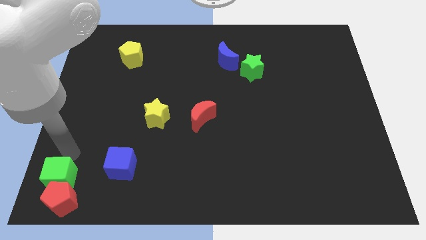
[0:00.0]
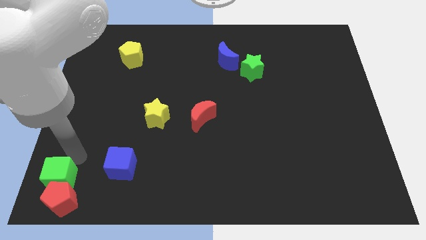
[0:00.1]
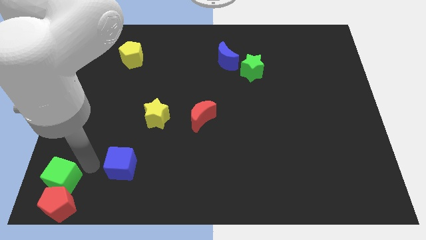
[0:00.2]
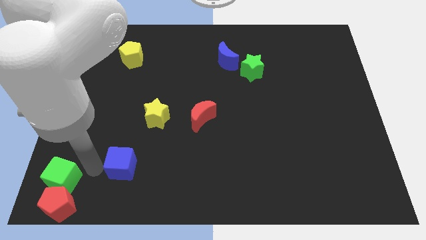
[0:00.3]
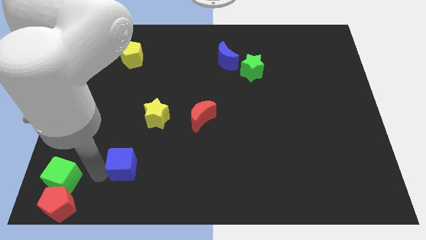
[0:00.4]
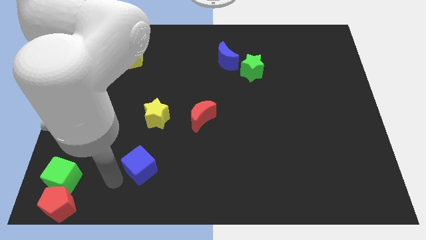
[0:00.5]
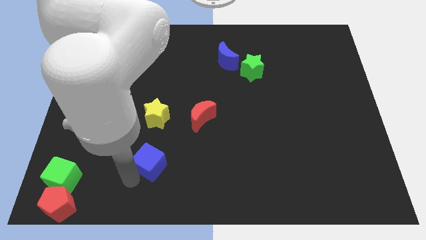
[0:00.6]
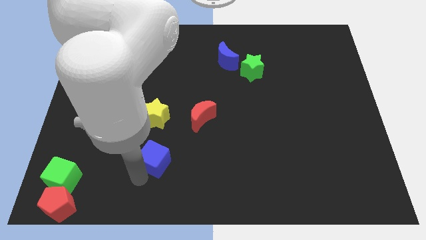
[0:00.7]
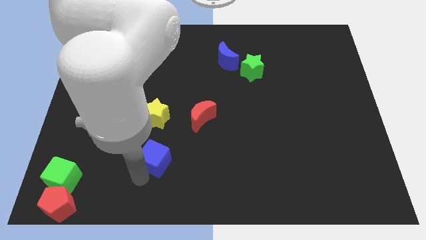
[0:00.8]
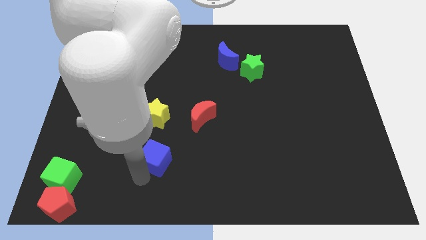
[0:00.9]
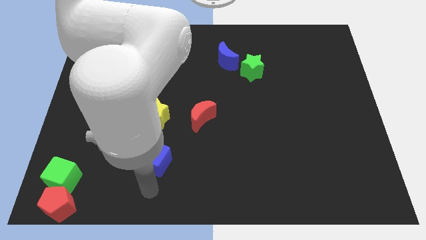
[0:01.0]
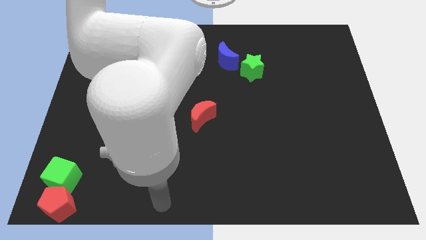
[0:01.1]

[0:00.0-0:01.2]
place blue cube down to the yellow star

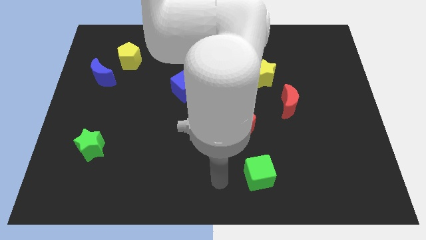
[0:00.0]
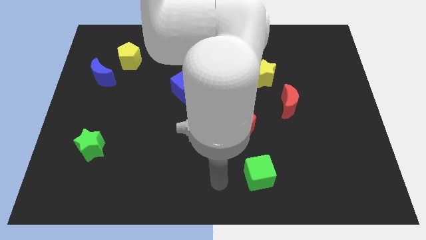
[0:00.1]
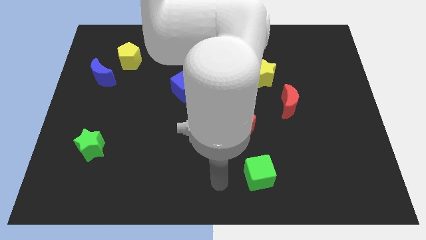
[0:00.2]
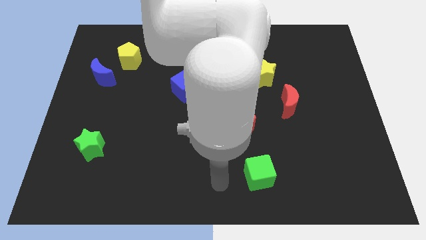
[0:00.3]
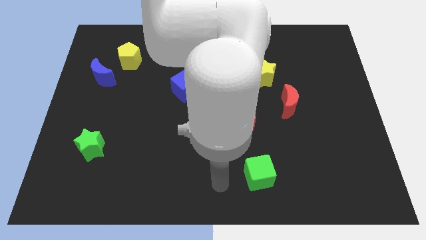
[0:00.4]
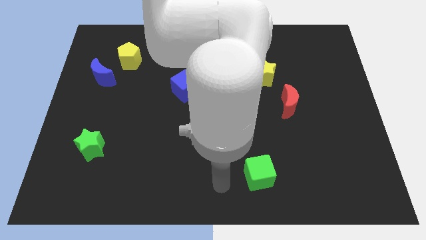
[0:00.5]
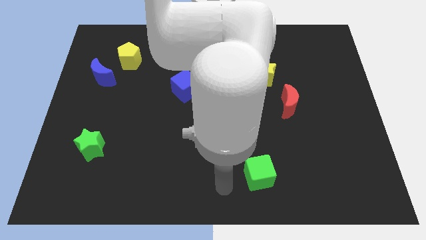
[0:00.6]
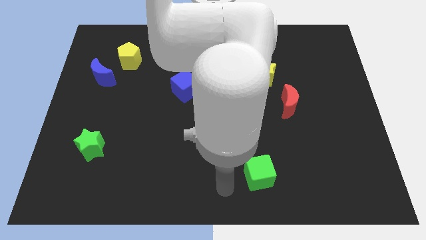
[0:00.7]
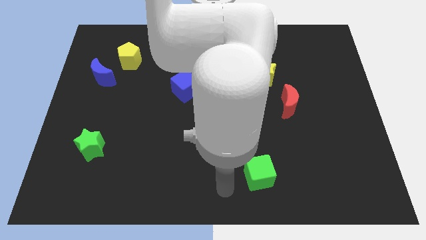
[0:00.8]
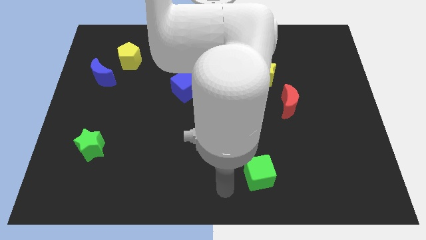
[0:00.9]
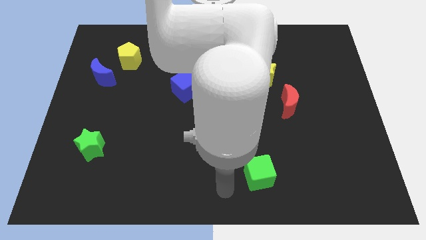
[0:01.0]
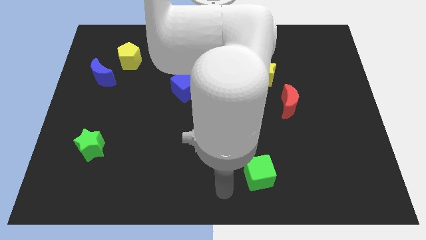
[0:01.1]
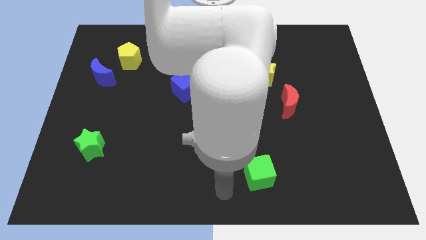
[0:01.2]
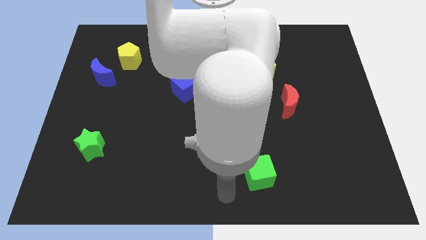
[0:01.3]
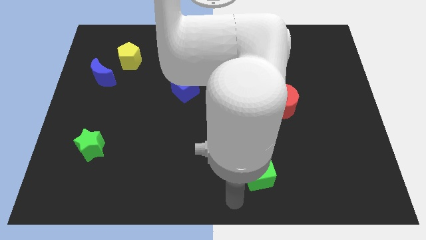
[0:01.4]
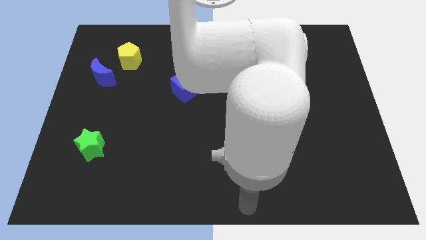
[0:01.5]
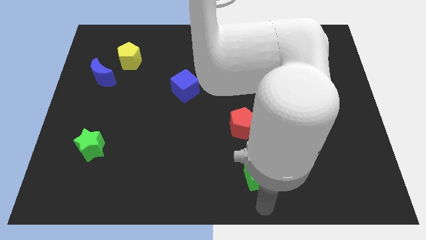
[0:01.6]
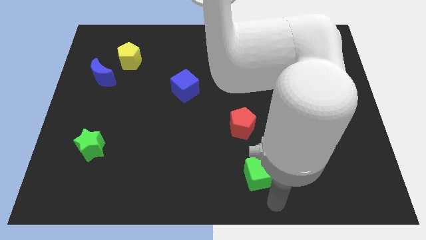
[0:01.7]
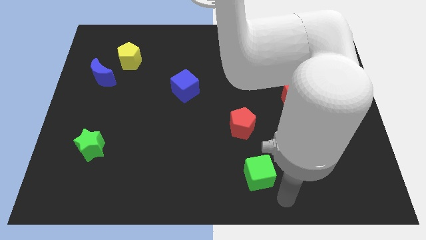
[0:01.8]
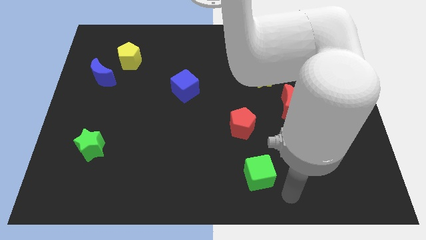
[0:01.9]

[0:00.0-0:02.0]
move the arm towards the green cube

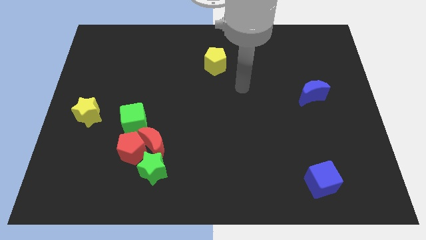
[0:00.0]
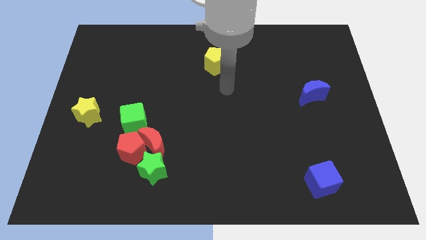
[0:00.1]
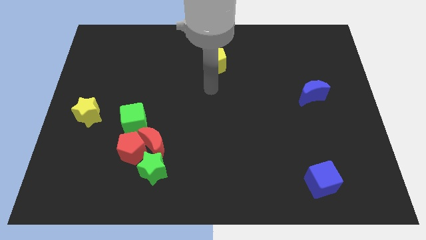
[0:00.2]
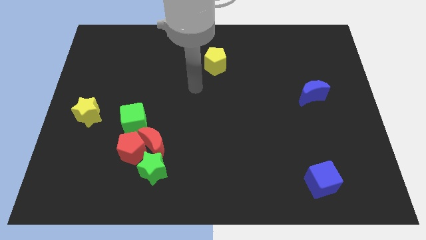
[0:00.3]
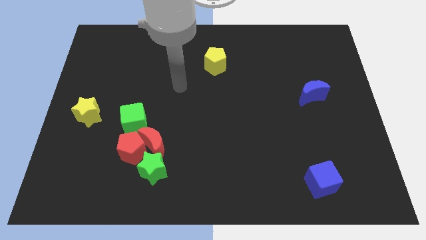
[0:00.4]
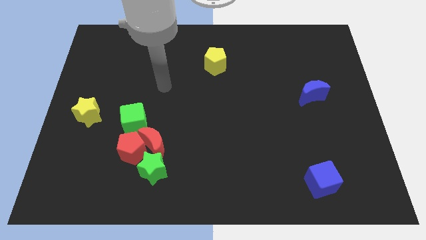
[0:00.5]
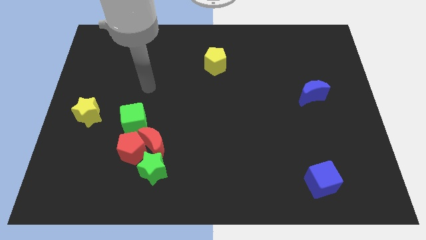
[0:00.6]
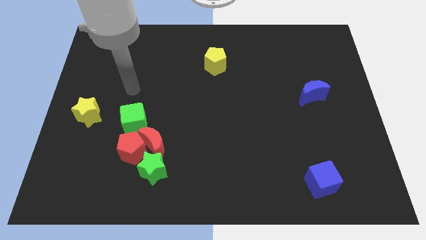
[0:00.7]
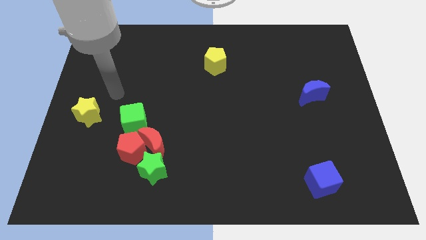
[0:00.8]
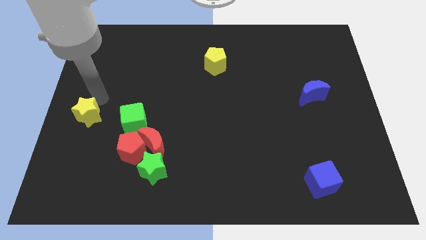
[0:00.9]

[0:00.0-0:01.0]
move your arm towards the top of the yellow star

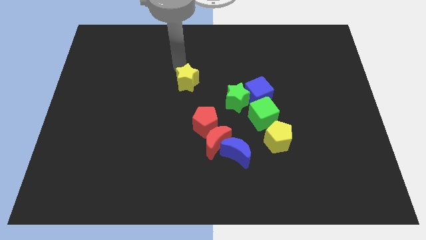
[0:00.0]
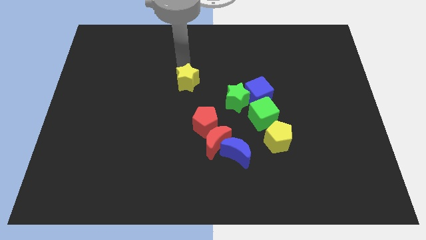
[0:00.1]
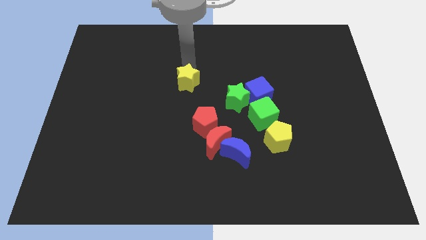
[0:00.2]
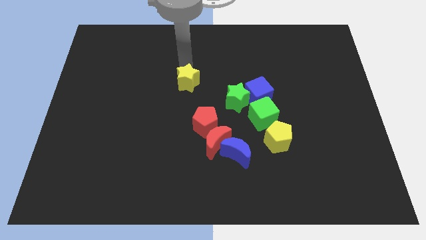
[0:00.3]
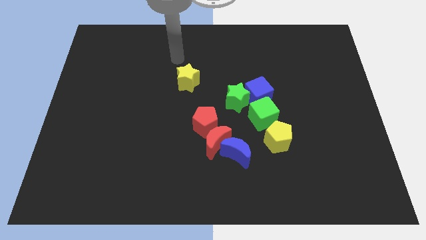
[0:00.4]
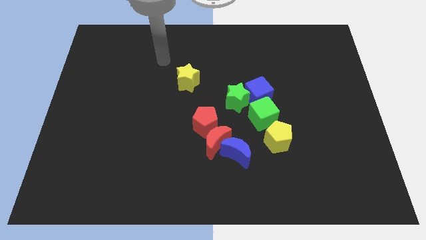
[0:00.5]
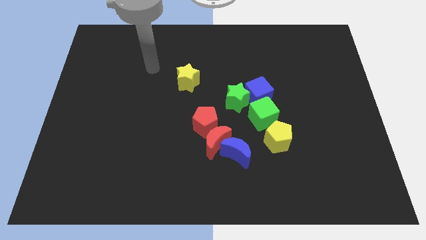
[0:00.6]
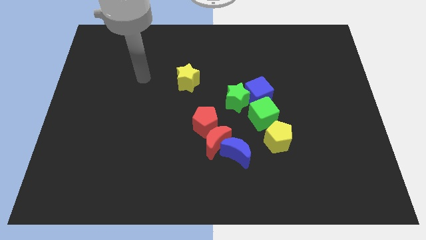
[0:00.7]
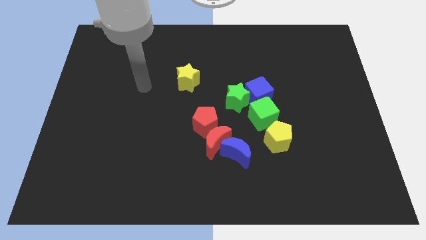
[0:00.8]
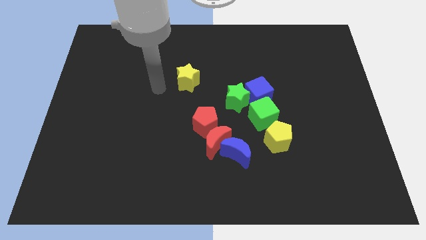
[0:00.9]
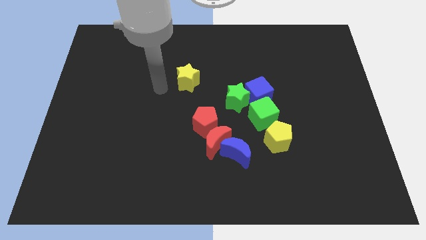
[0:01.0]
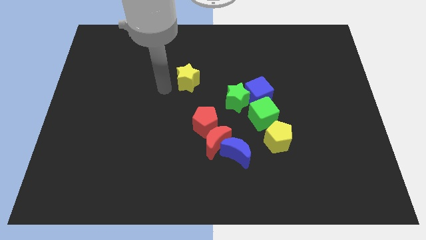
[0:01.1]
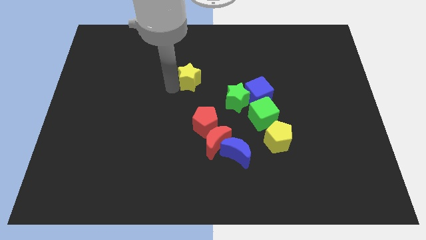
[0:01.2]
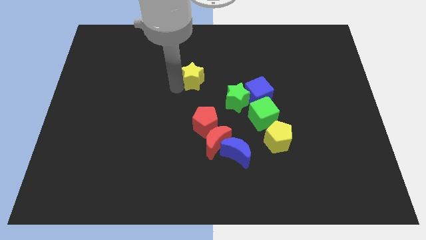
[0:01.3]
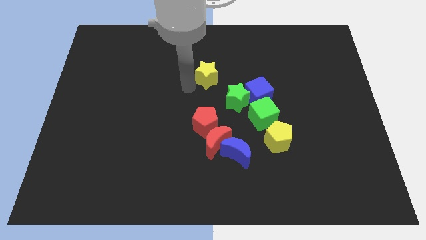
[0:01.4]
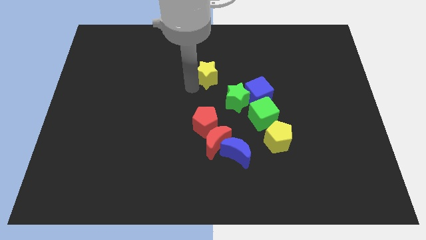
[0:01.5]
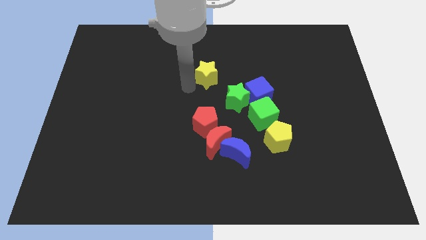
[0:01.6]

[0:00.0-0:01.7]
move yellow star parallel to green star

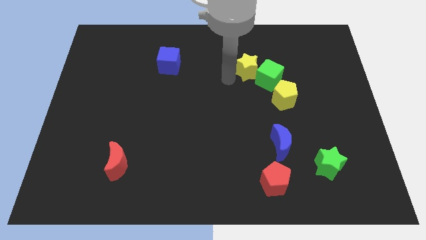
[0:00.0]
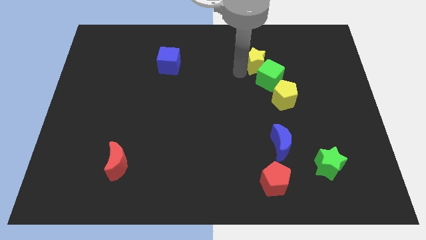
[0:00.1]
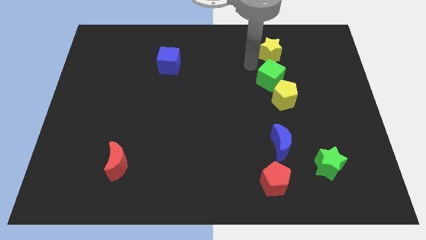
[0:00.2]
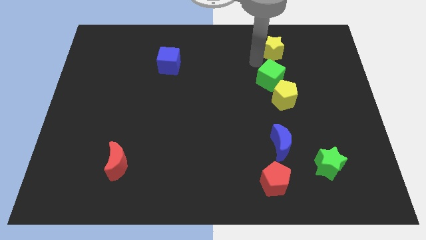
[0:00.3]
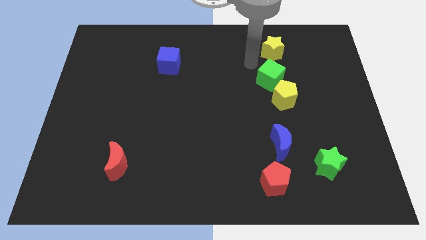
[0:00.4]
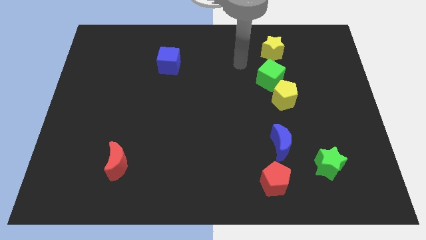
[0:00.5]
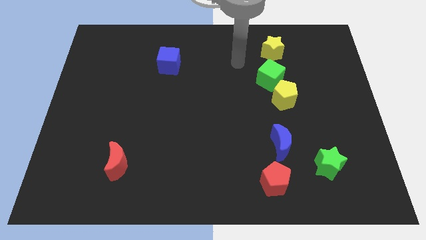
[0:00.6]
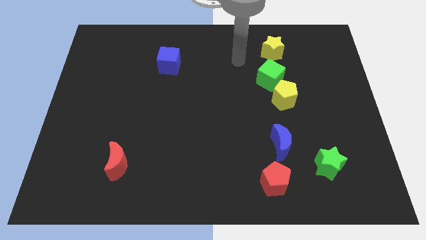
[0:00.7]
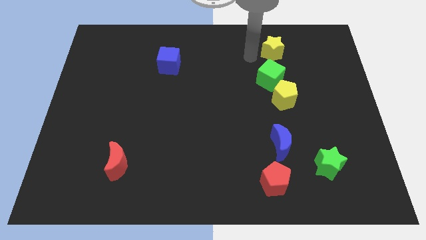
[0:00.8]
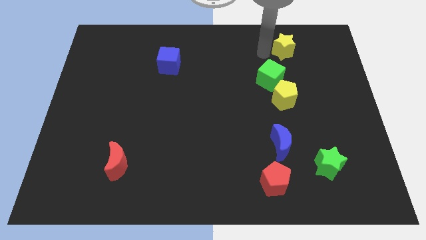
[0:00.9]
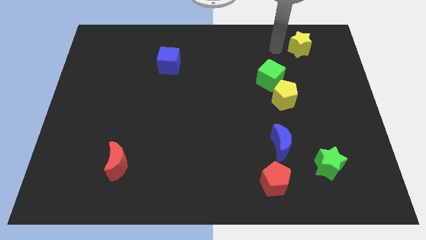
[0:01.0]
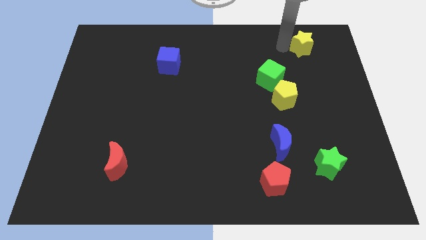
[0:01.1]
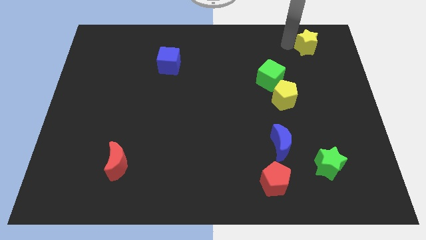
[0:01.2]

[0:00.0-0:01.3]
push yellow star to the top right corner of the board

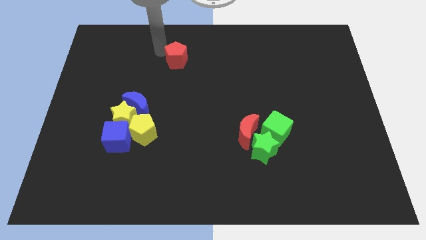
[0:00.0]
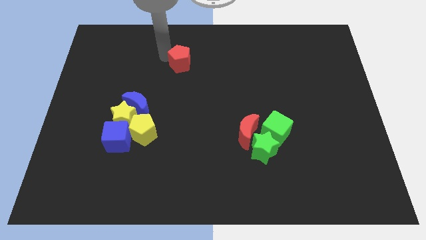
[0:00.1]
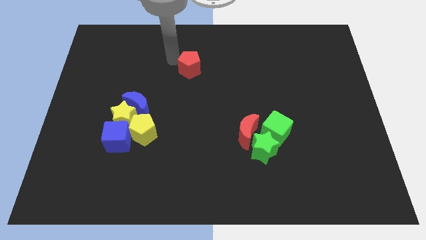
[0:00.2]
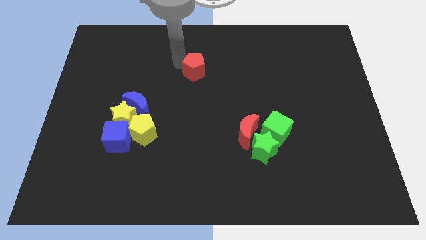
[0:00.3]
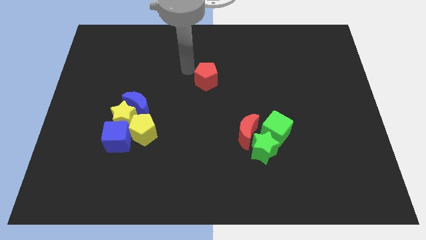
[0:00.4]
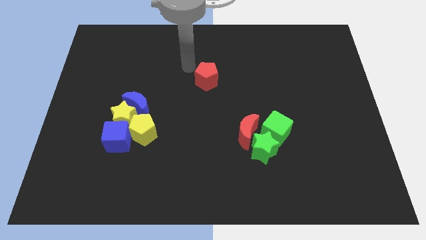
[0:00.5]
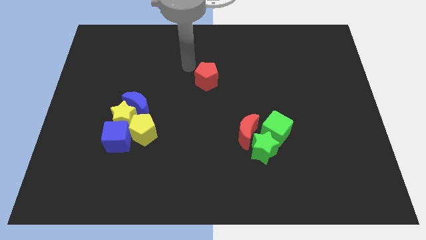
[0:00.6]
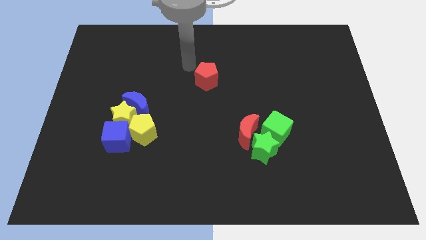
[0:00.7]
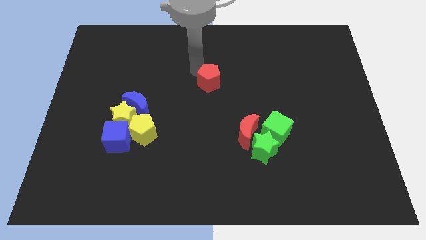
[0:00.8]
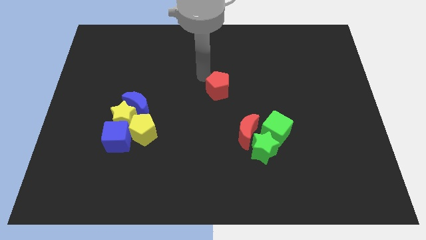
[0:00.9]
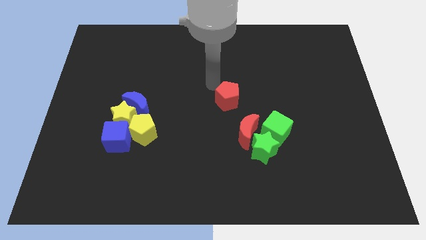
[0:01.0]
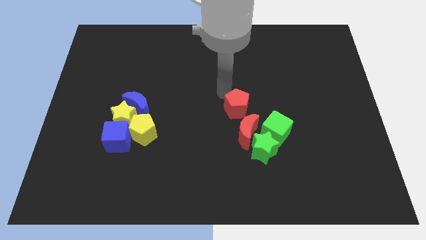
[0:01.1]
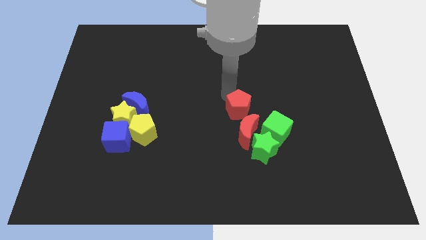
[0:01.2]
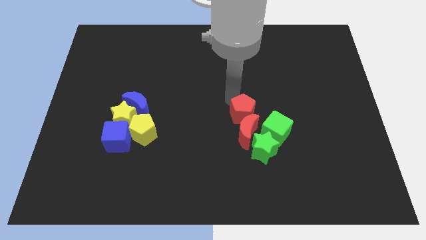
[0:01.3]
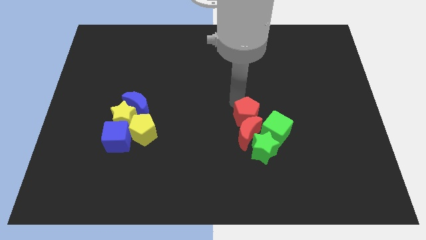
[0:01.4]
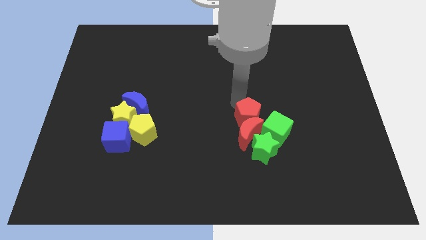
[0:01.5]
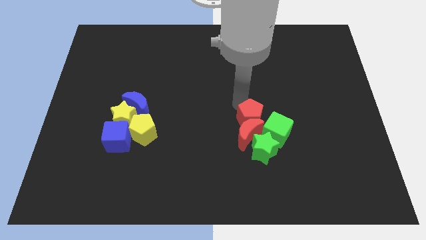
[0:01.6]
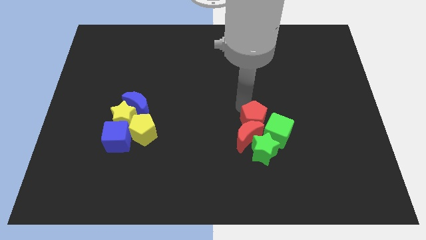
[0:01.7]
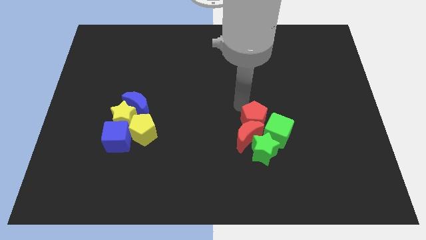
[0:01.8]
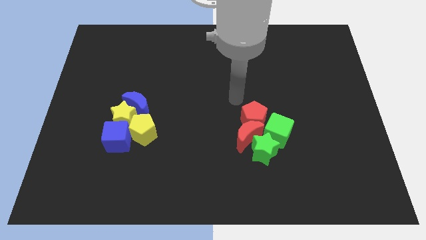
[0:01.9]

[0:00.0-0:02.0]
push the red pentagon in to the red moon
